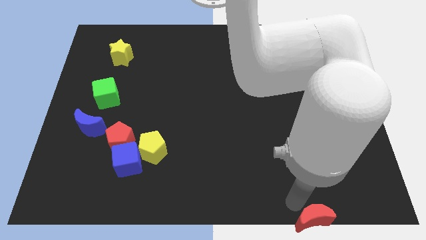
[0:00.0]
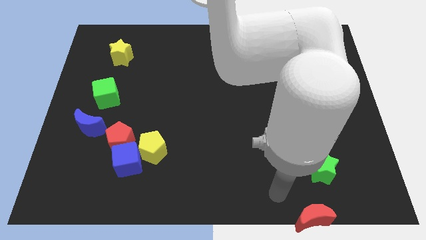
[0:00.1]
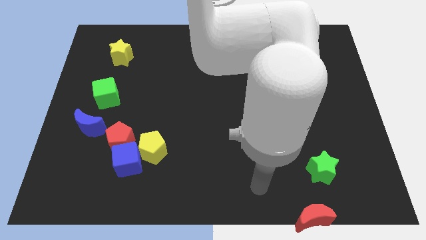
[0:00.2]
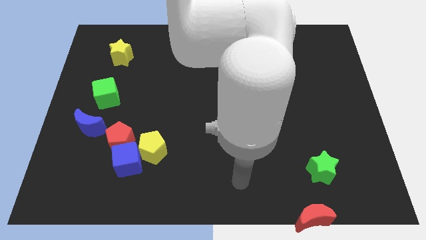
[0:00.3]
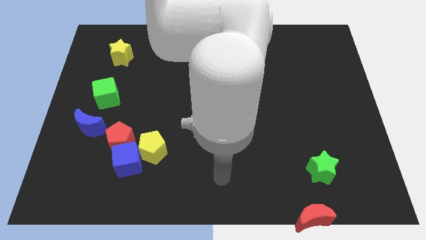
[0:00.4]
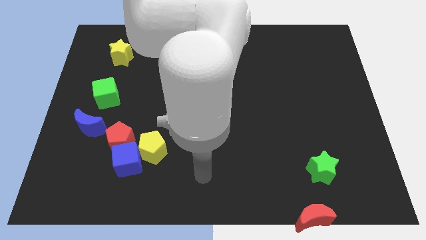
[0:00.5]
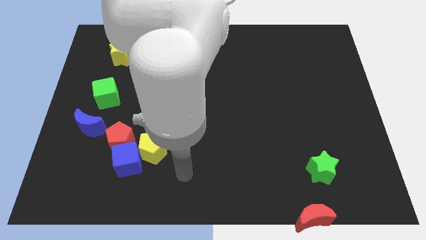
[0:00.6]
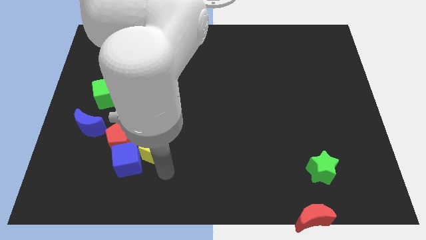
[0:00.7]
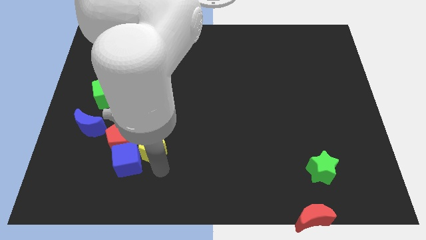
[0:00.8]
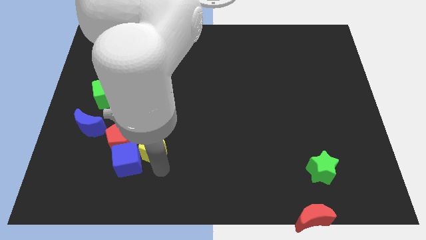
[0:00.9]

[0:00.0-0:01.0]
place your arm at the bottom of yellow pentagon

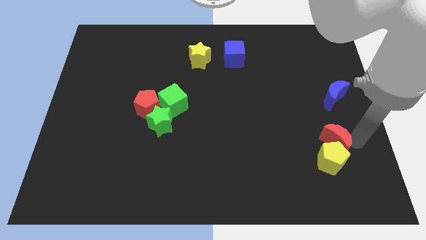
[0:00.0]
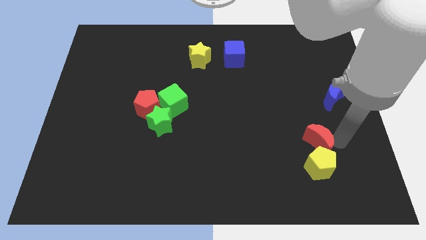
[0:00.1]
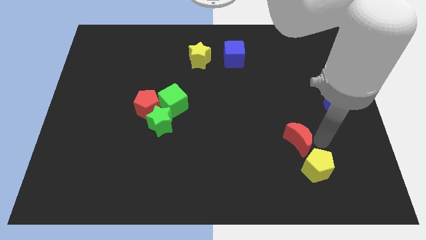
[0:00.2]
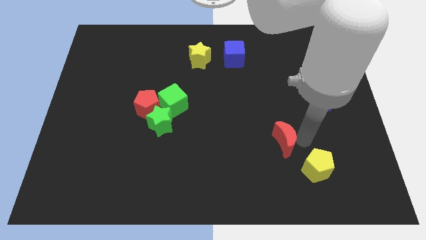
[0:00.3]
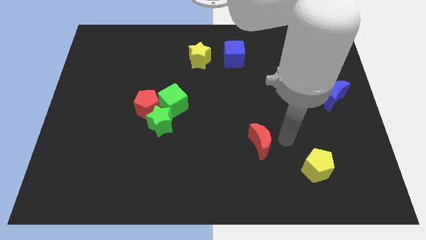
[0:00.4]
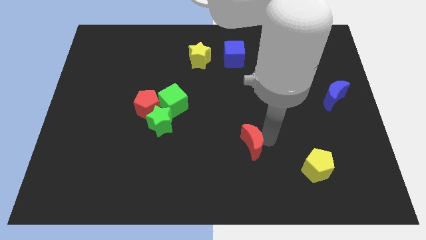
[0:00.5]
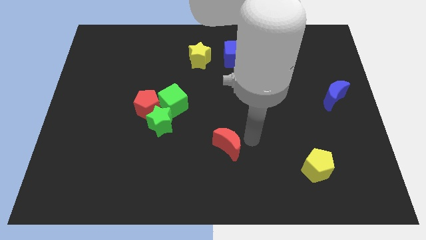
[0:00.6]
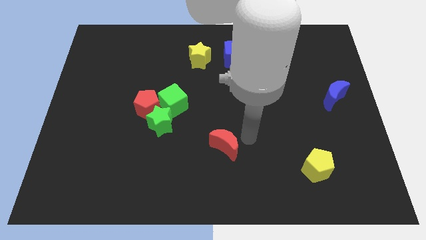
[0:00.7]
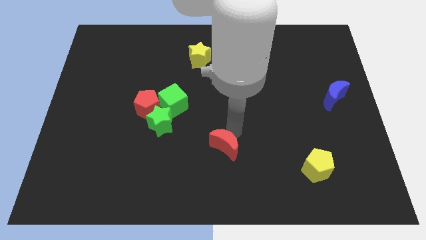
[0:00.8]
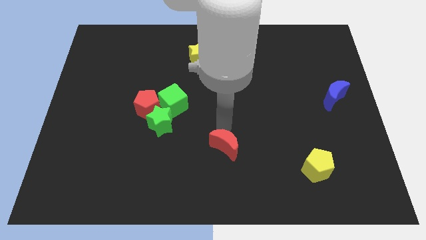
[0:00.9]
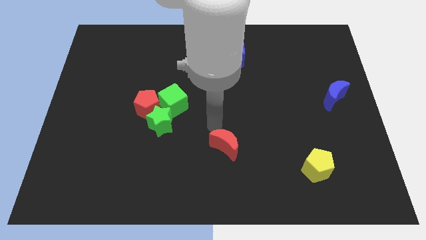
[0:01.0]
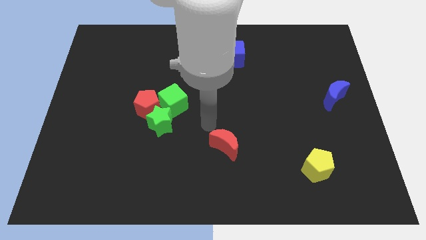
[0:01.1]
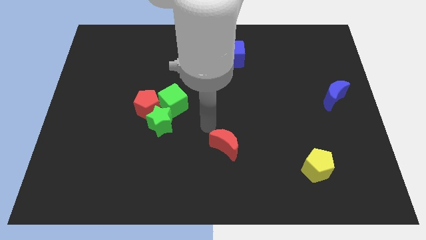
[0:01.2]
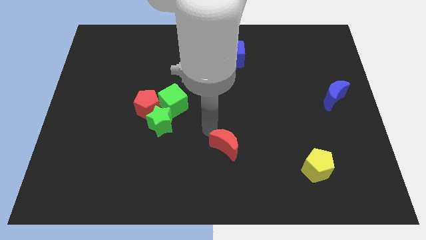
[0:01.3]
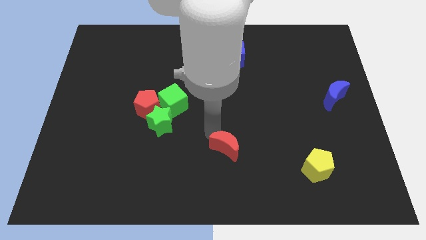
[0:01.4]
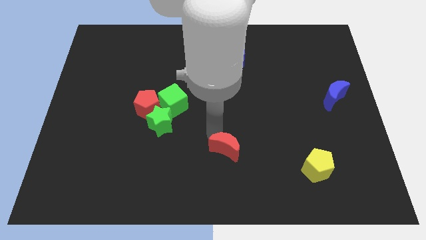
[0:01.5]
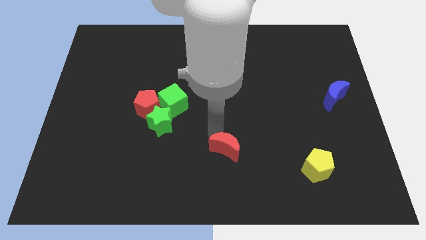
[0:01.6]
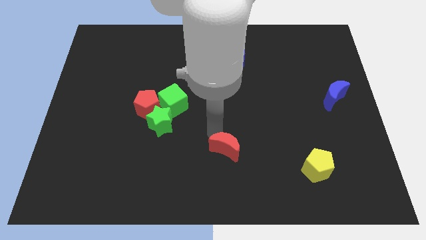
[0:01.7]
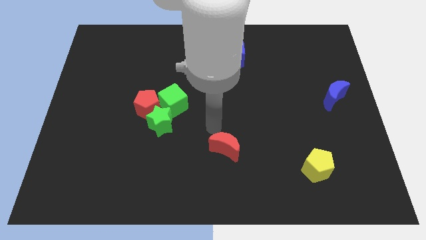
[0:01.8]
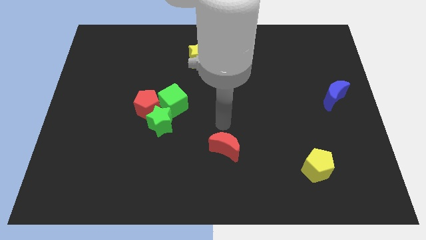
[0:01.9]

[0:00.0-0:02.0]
move the red moon vertical below blue cube

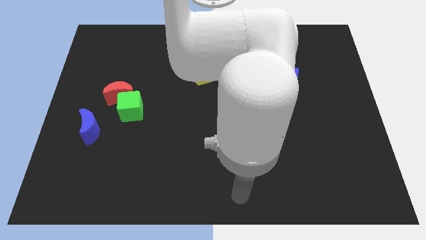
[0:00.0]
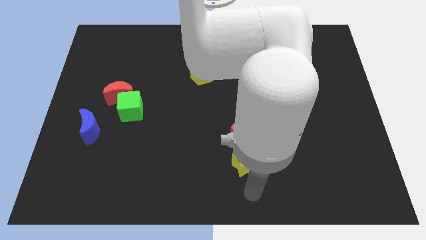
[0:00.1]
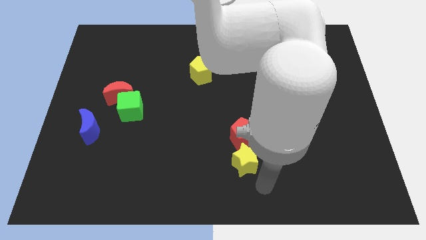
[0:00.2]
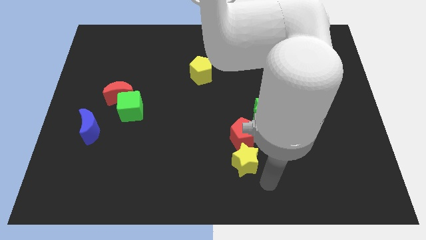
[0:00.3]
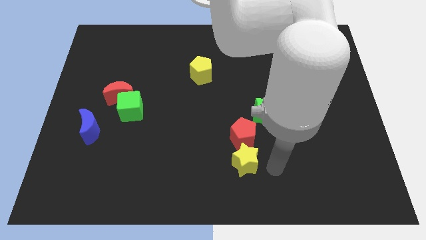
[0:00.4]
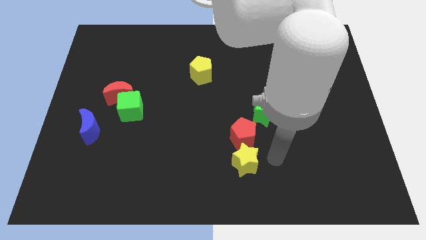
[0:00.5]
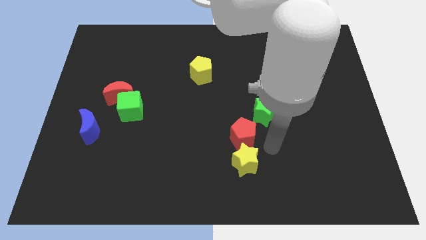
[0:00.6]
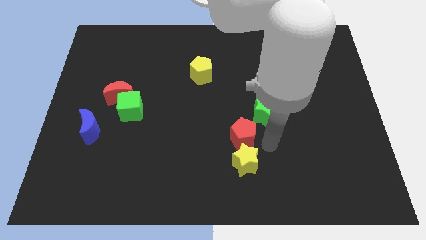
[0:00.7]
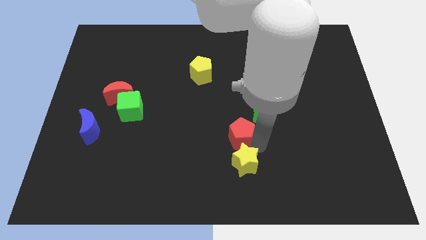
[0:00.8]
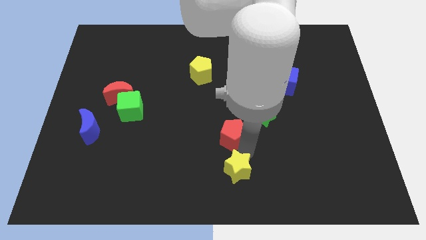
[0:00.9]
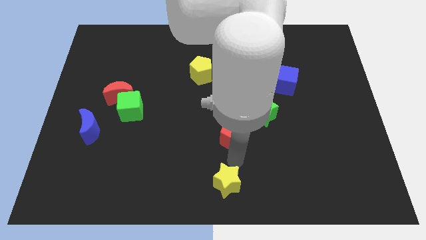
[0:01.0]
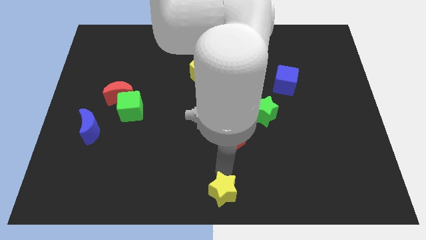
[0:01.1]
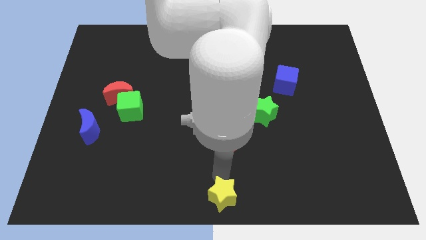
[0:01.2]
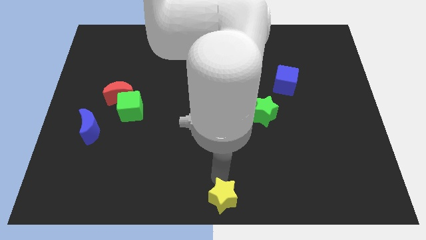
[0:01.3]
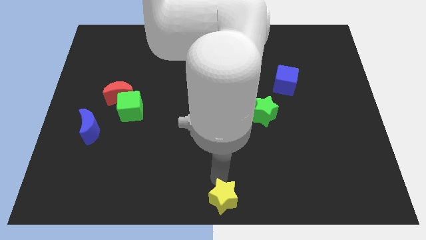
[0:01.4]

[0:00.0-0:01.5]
separate red pentagon and the yellow star

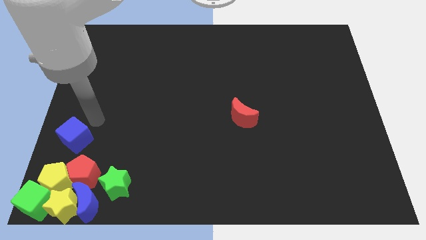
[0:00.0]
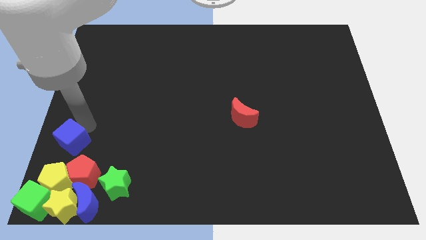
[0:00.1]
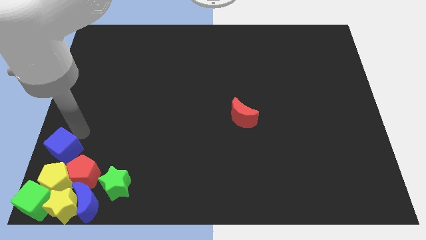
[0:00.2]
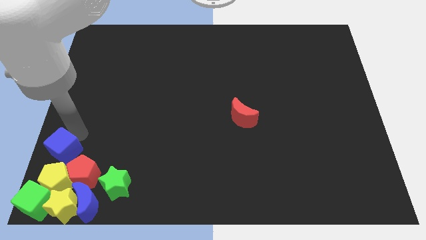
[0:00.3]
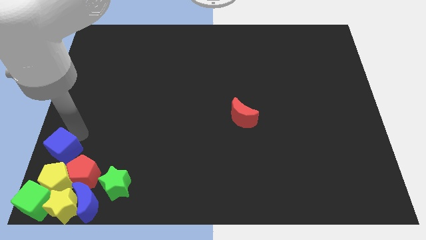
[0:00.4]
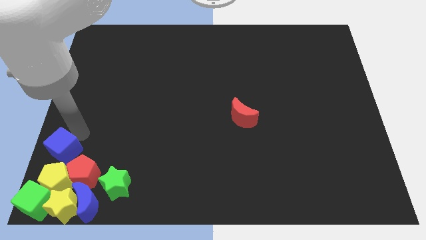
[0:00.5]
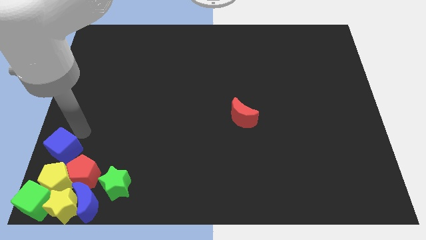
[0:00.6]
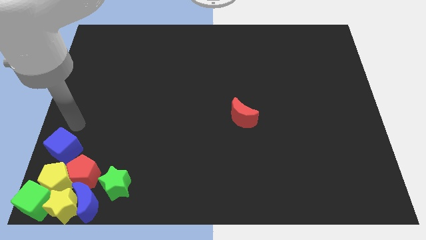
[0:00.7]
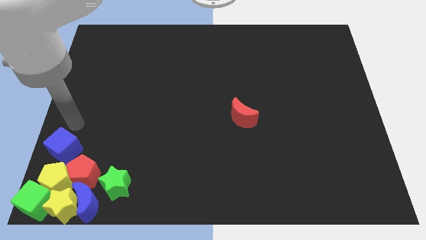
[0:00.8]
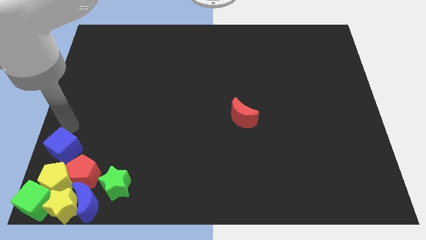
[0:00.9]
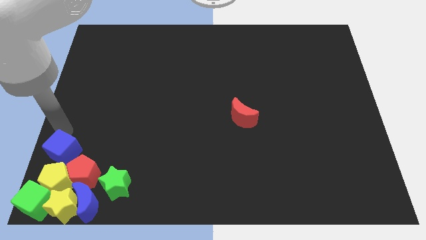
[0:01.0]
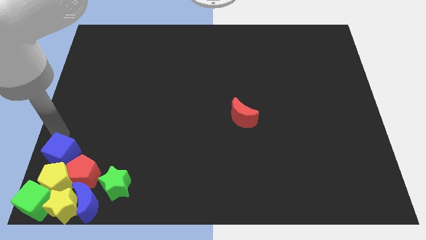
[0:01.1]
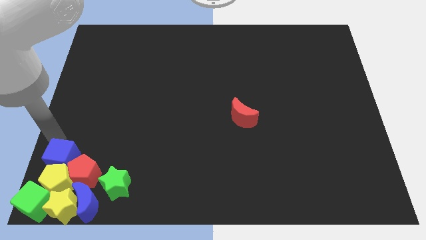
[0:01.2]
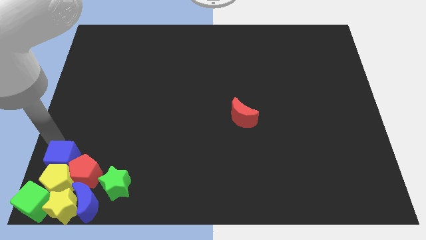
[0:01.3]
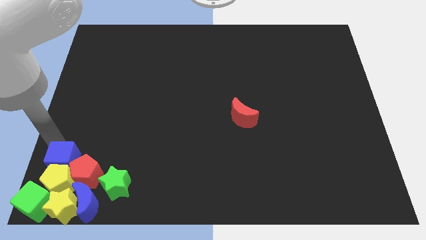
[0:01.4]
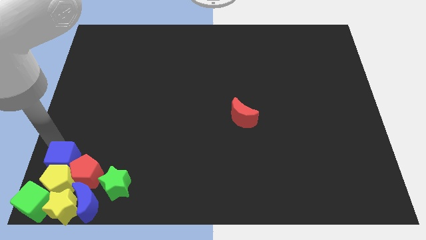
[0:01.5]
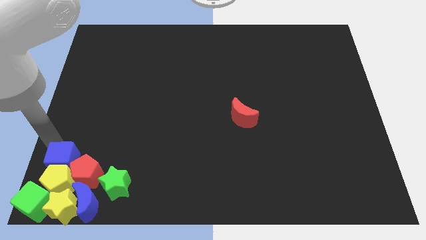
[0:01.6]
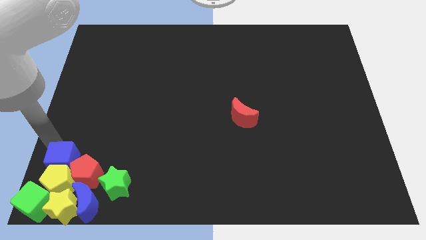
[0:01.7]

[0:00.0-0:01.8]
place the blue cube above the yellow pentagon

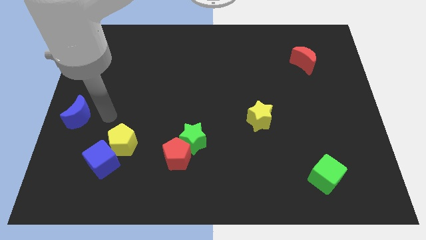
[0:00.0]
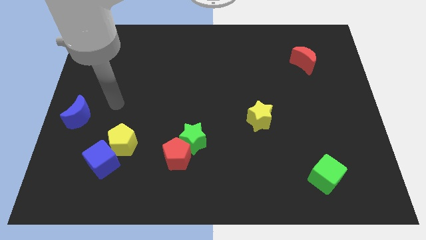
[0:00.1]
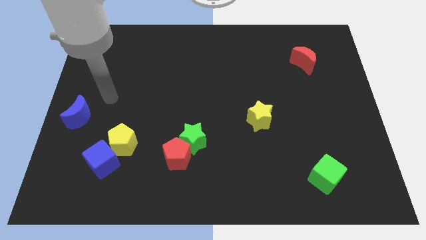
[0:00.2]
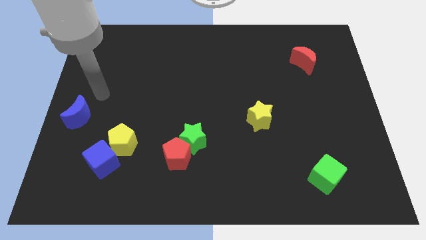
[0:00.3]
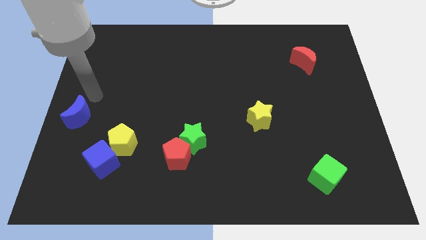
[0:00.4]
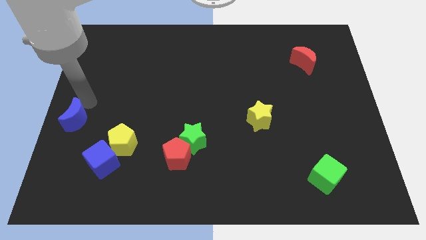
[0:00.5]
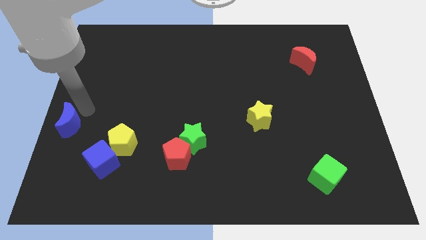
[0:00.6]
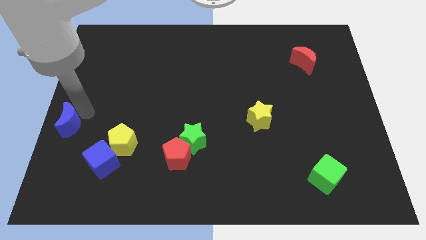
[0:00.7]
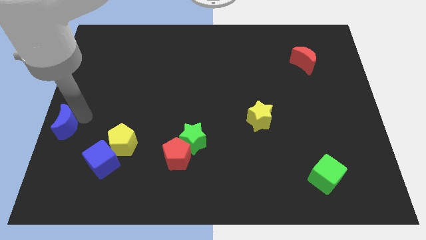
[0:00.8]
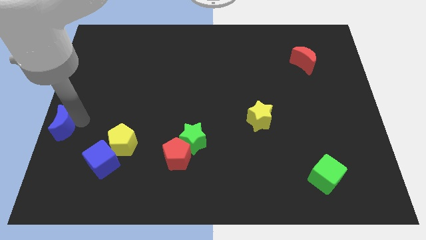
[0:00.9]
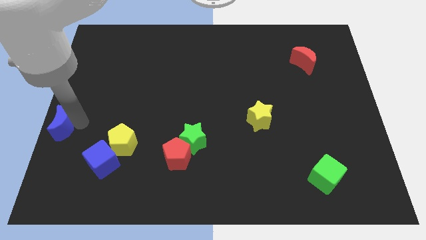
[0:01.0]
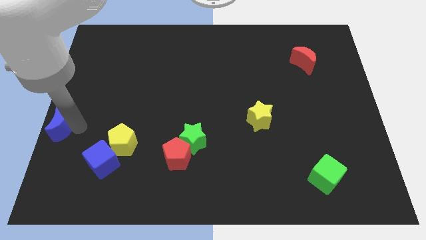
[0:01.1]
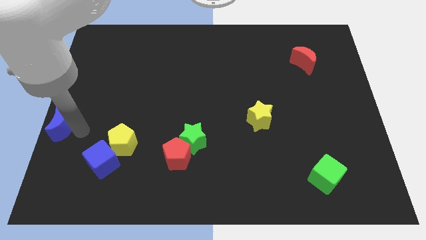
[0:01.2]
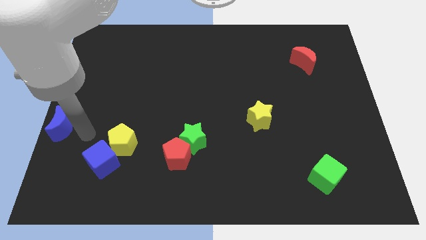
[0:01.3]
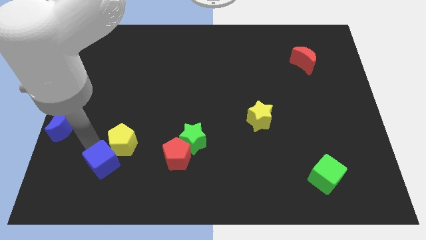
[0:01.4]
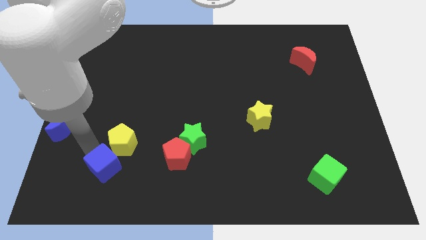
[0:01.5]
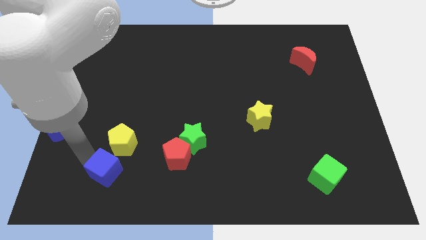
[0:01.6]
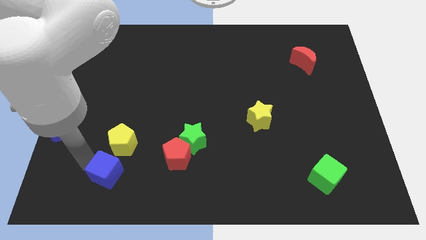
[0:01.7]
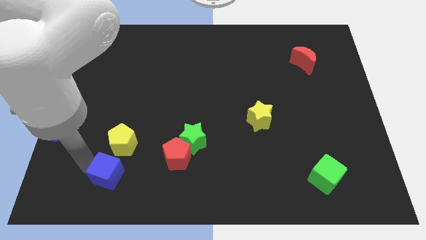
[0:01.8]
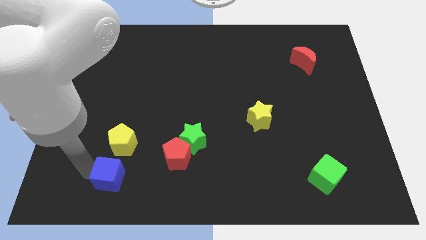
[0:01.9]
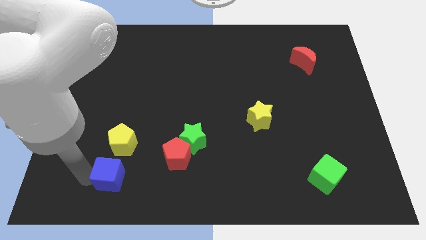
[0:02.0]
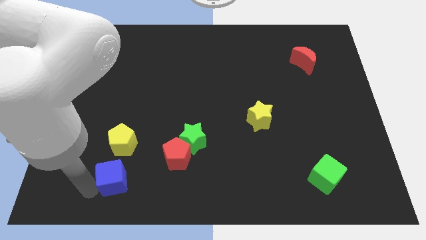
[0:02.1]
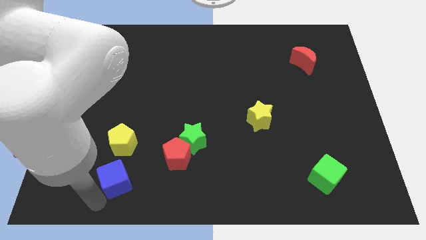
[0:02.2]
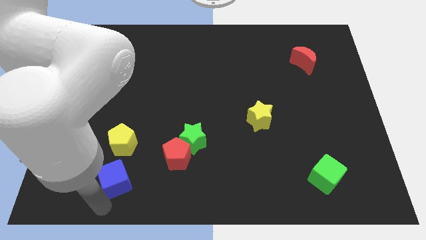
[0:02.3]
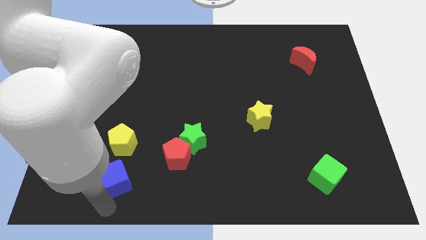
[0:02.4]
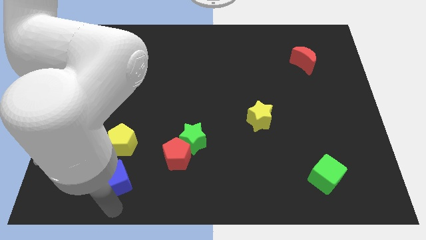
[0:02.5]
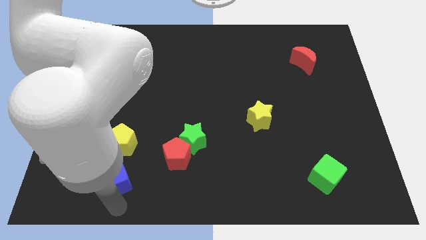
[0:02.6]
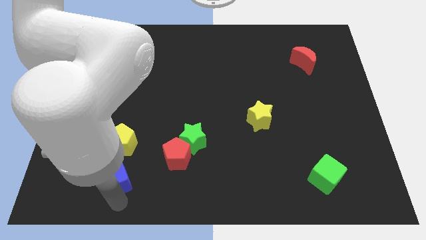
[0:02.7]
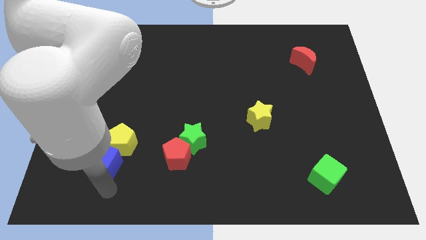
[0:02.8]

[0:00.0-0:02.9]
move the blue cube vertically below the yellow pentagon
